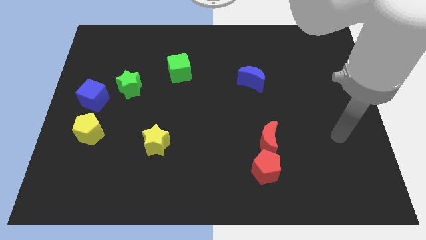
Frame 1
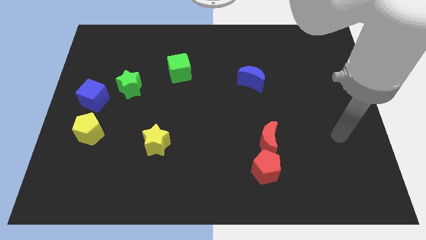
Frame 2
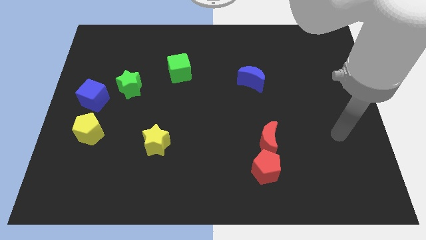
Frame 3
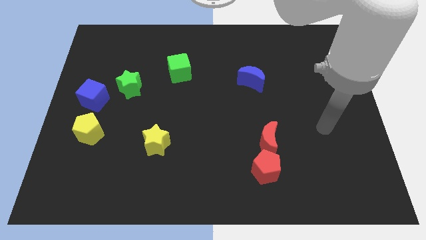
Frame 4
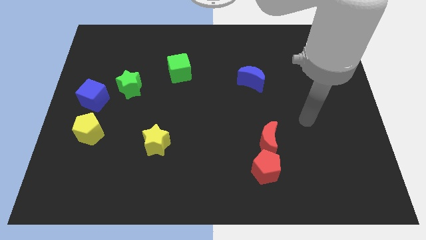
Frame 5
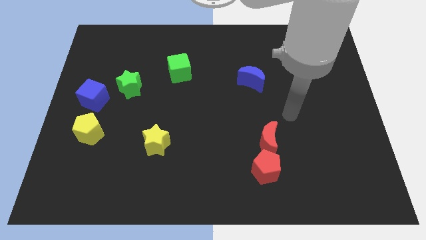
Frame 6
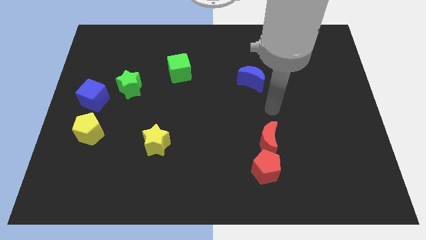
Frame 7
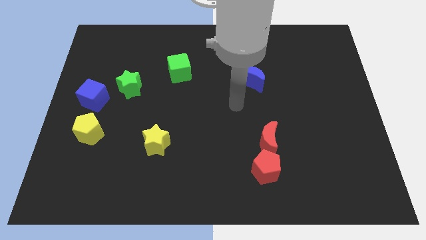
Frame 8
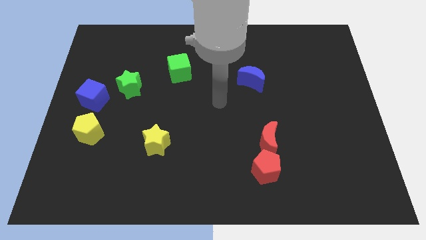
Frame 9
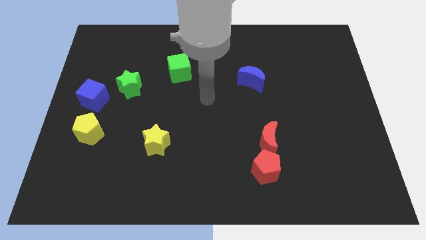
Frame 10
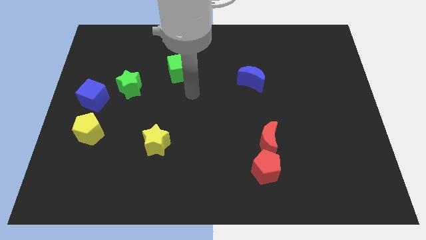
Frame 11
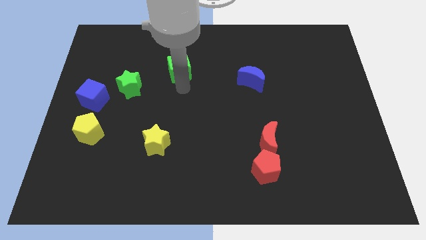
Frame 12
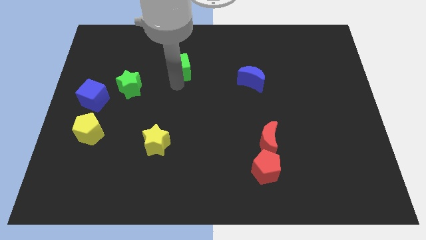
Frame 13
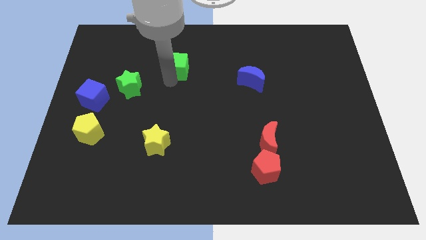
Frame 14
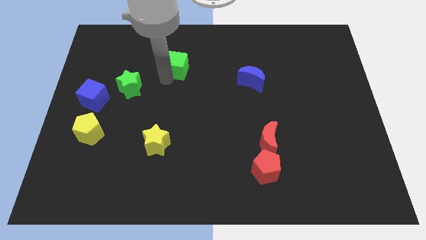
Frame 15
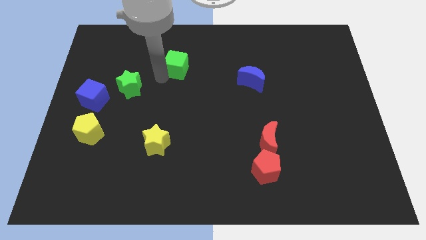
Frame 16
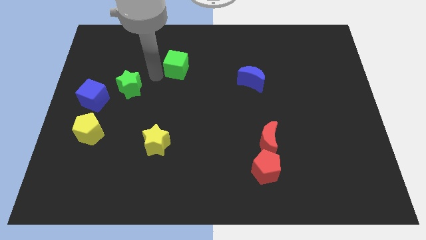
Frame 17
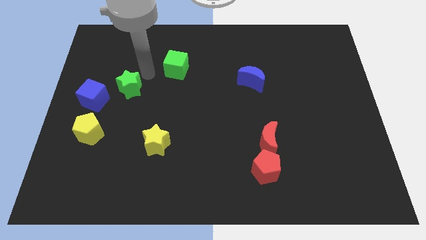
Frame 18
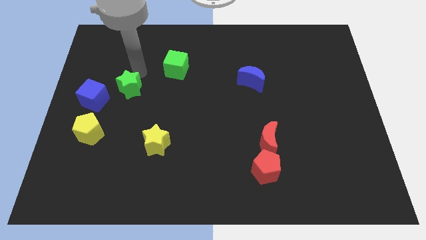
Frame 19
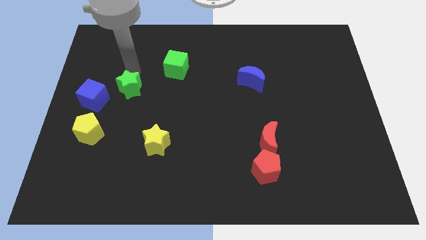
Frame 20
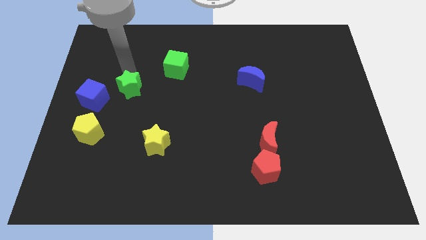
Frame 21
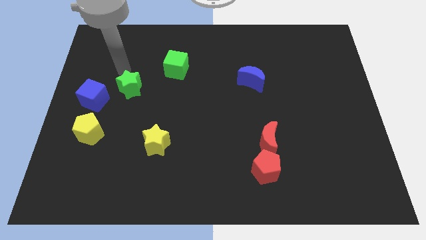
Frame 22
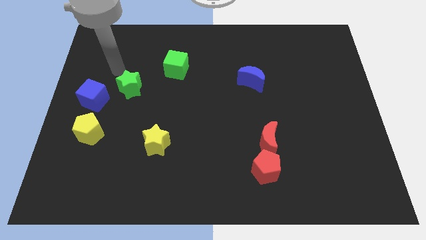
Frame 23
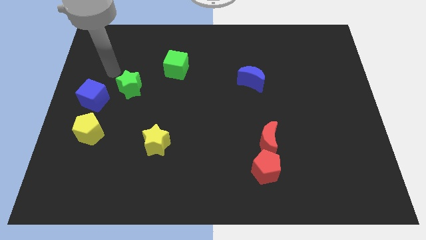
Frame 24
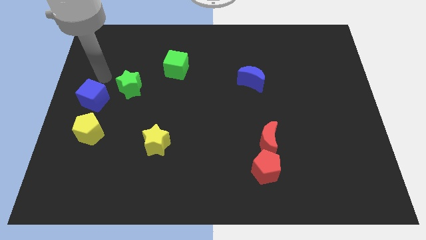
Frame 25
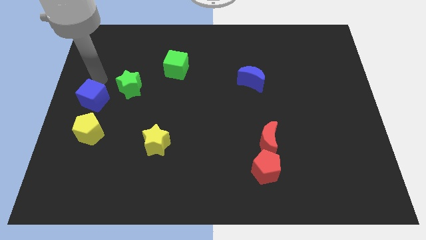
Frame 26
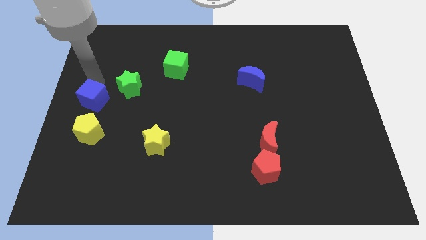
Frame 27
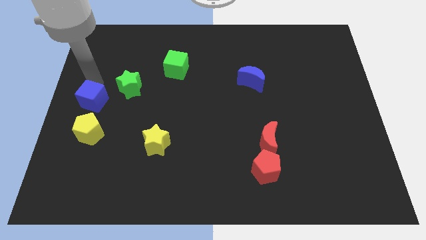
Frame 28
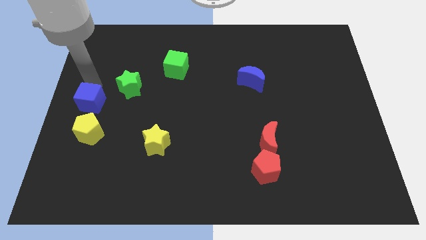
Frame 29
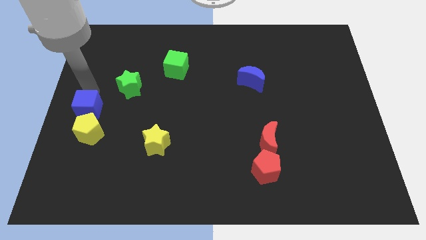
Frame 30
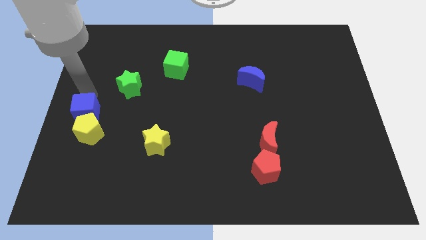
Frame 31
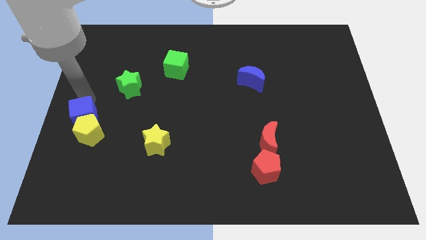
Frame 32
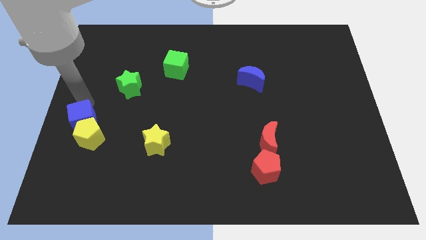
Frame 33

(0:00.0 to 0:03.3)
move the blue cube to the yellow pentagon

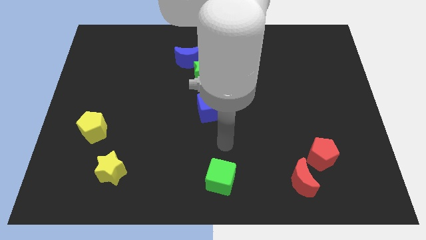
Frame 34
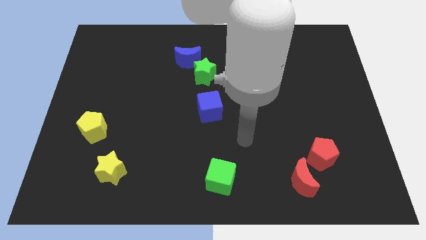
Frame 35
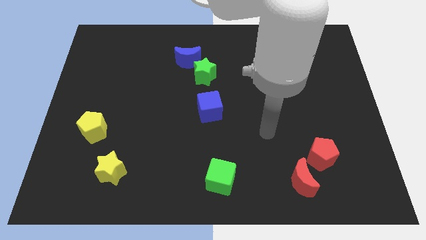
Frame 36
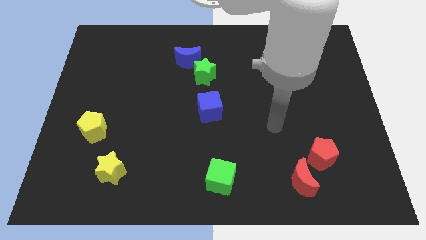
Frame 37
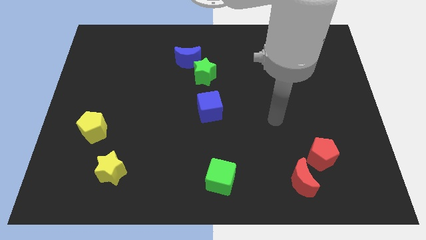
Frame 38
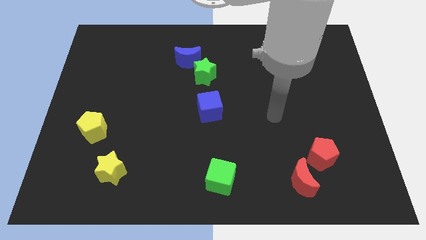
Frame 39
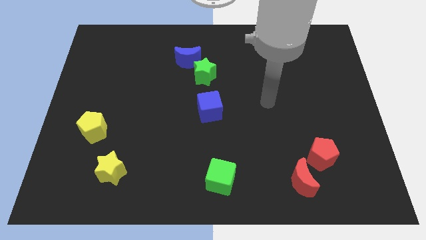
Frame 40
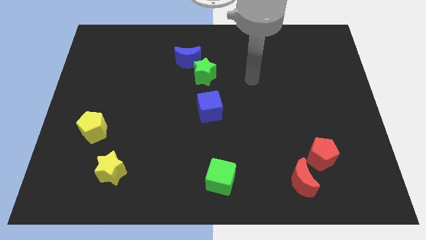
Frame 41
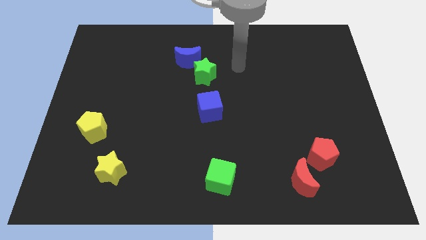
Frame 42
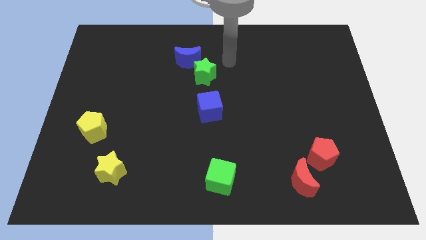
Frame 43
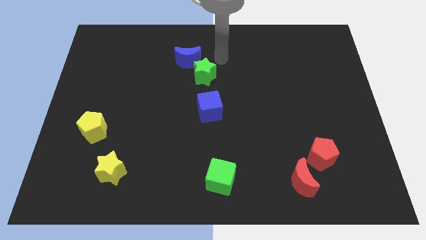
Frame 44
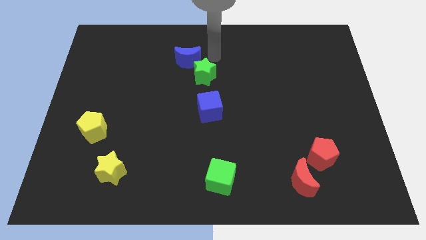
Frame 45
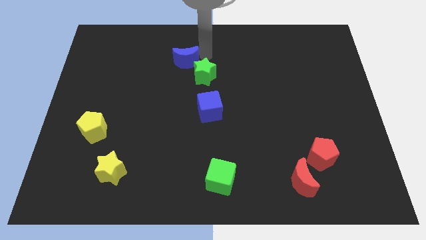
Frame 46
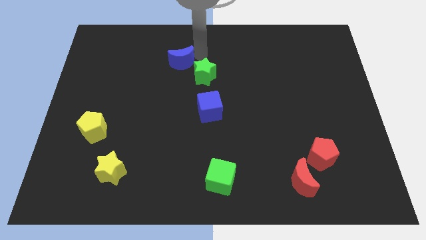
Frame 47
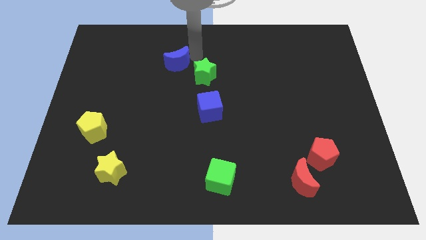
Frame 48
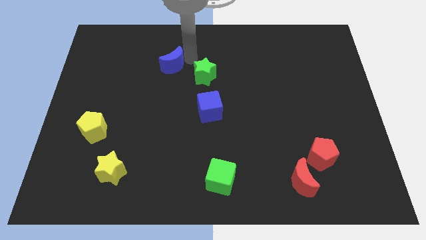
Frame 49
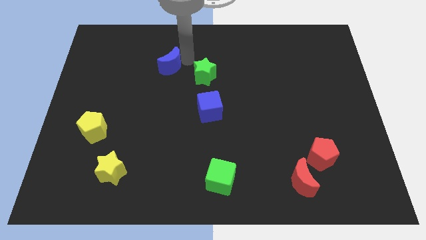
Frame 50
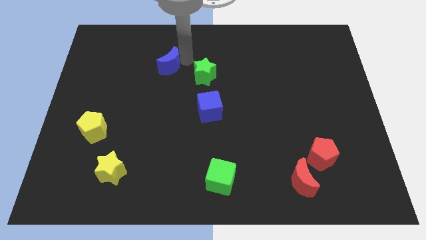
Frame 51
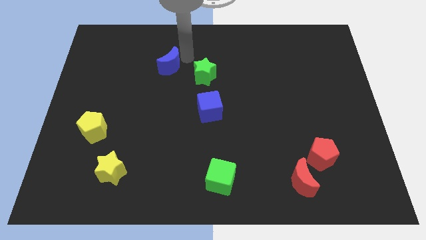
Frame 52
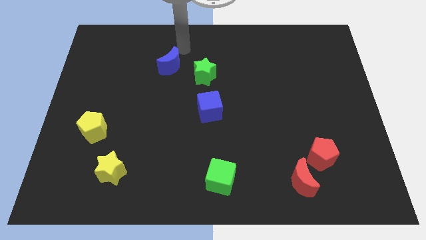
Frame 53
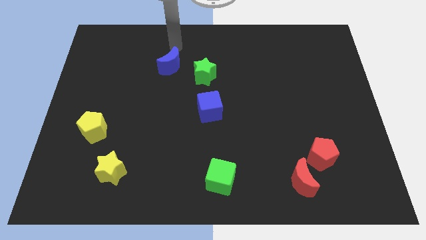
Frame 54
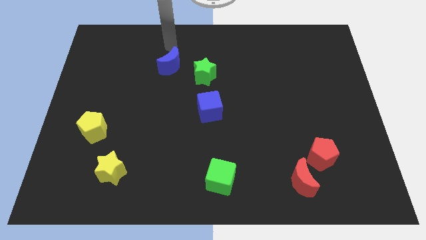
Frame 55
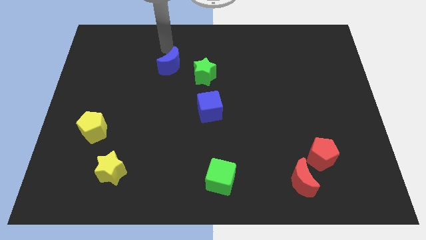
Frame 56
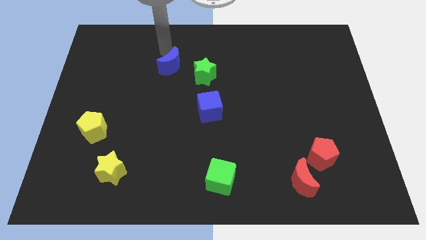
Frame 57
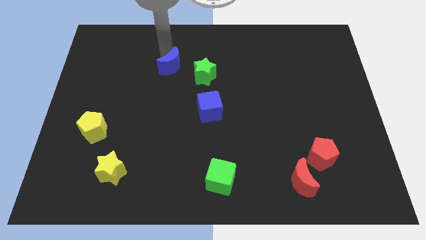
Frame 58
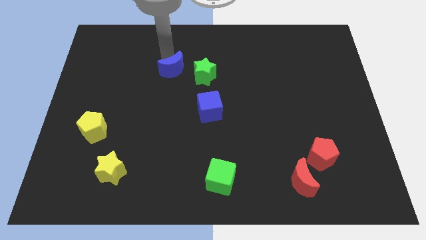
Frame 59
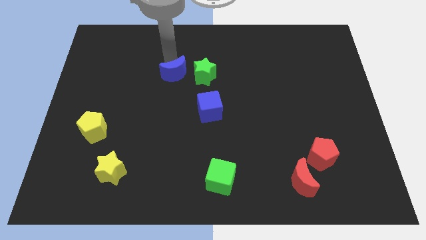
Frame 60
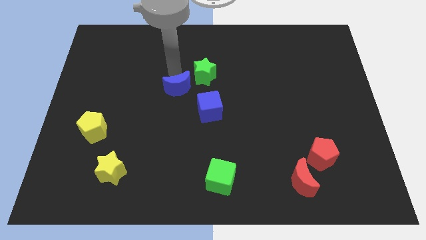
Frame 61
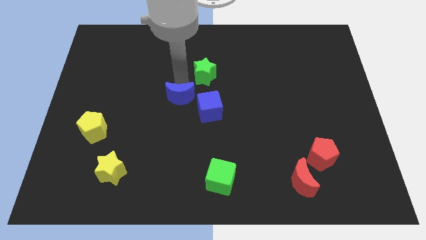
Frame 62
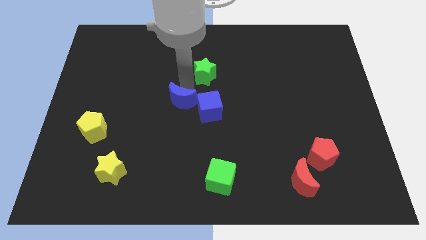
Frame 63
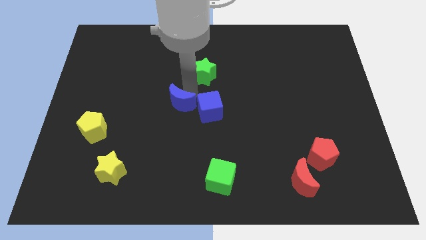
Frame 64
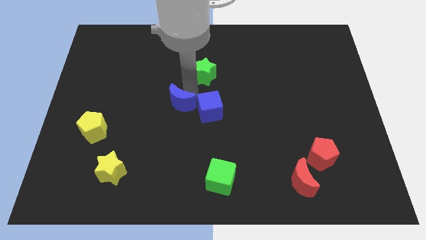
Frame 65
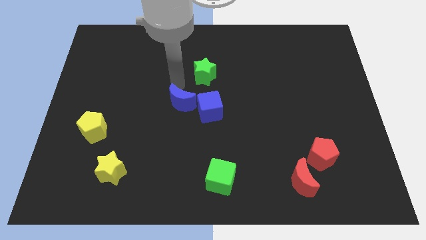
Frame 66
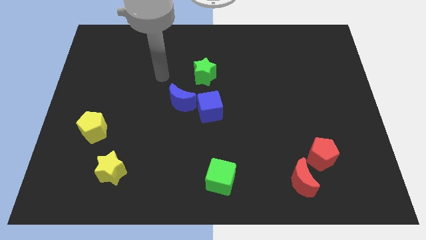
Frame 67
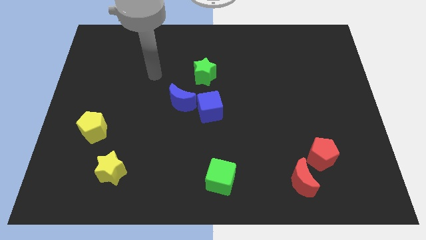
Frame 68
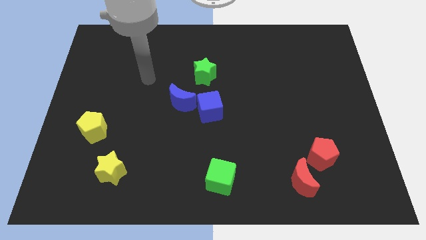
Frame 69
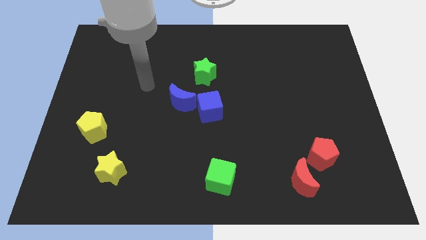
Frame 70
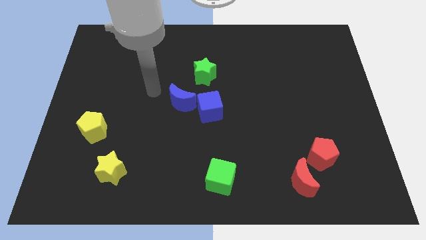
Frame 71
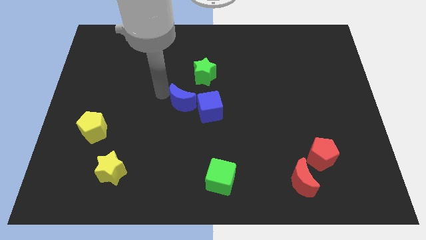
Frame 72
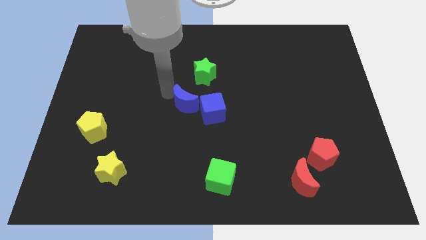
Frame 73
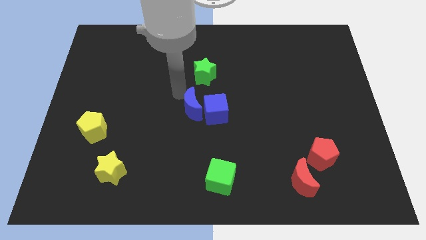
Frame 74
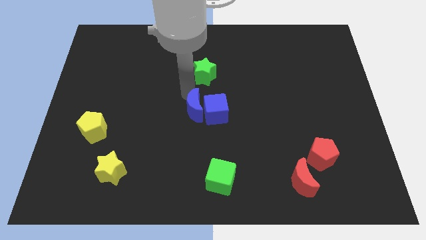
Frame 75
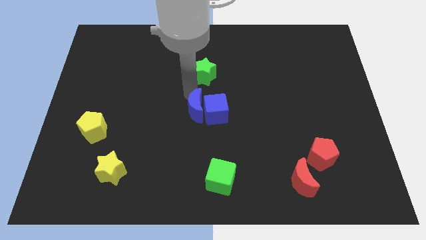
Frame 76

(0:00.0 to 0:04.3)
slide the blue moon to the blue cube

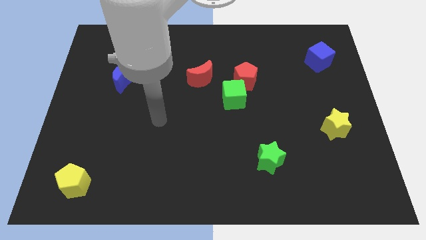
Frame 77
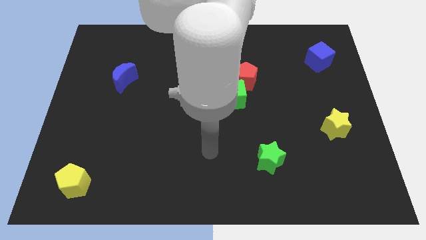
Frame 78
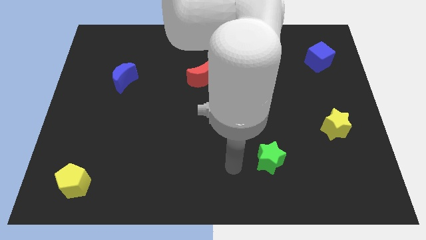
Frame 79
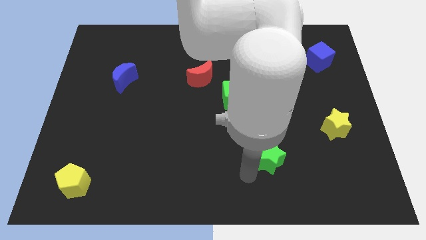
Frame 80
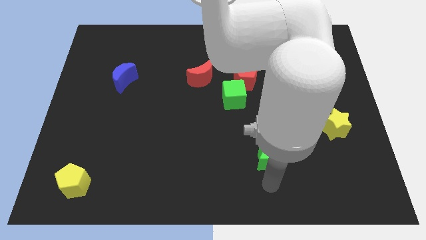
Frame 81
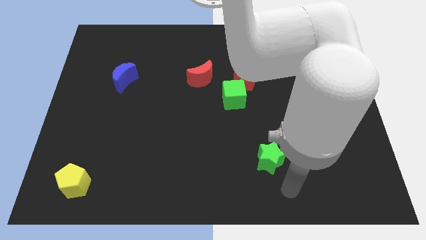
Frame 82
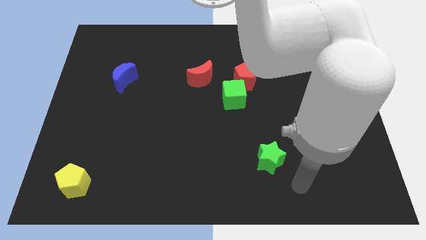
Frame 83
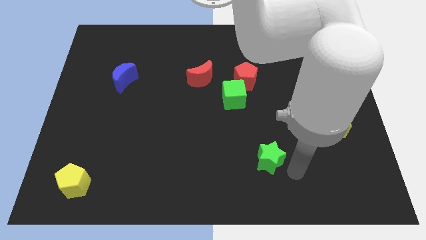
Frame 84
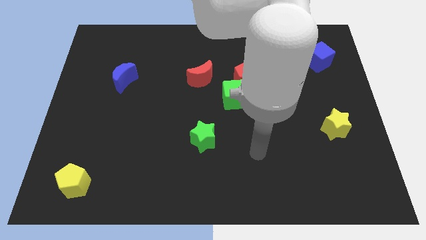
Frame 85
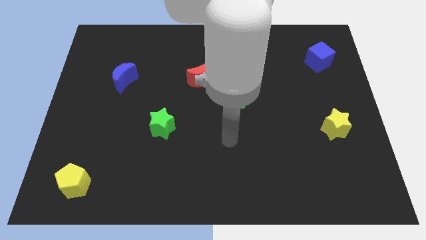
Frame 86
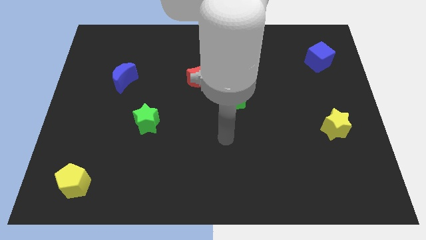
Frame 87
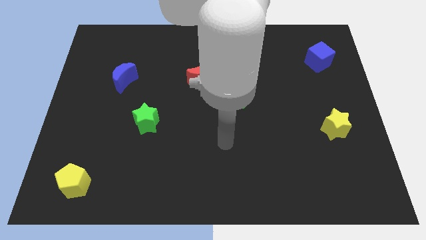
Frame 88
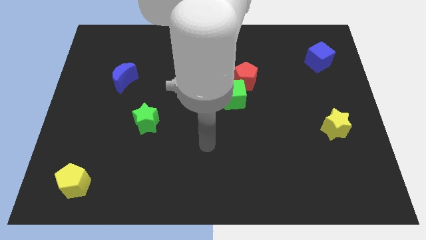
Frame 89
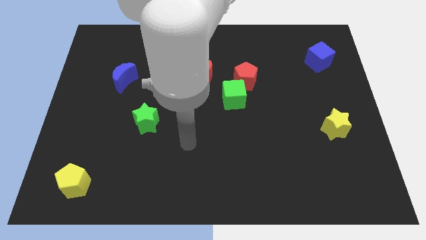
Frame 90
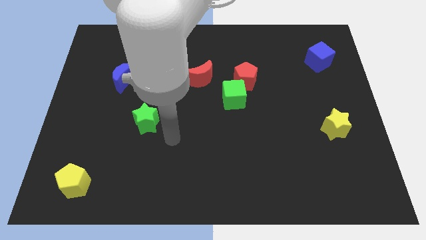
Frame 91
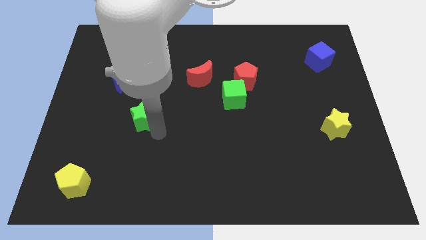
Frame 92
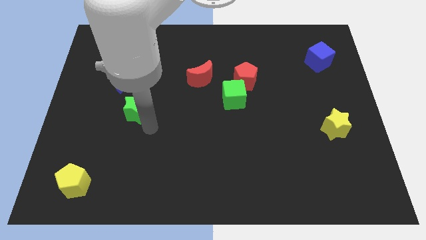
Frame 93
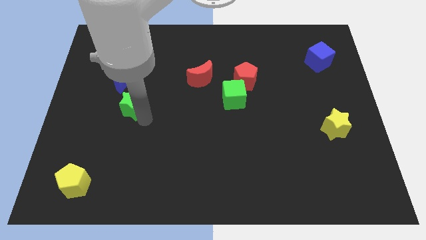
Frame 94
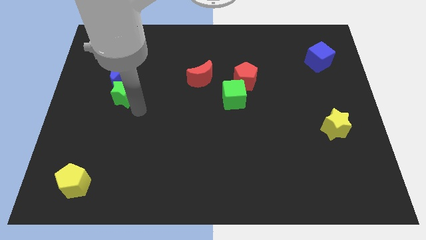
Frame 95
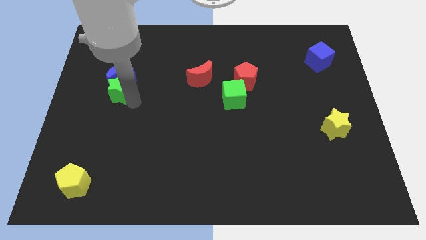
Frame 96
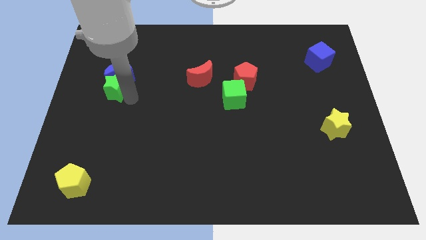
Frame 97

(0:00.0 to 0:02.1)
slide the green star to the blue moon
